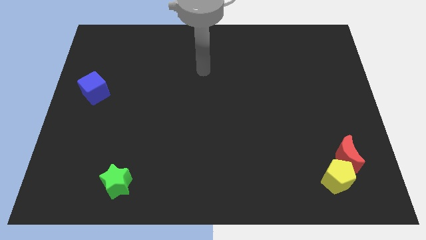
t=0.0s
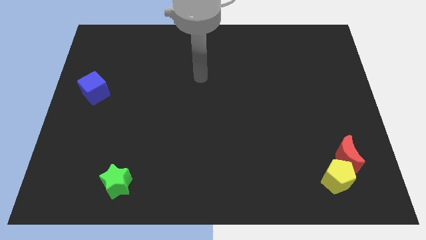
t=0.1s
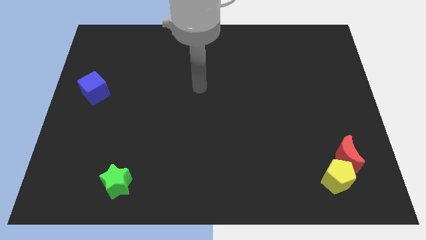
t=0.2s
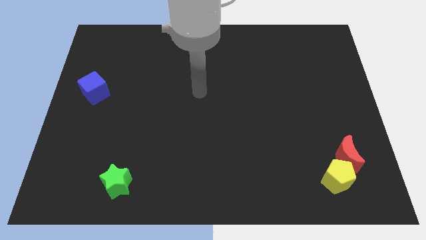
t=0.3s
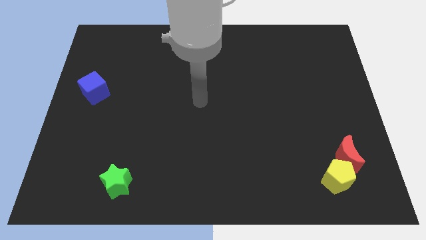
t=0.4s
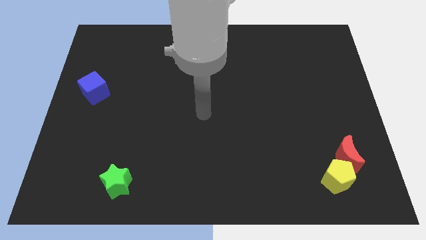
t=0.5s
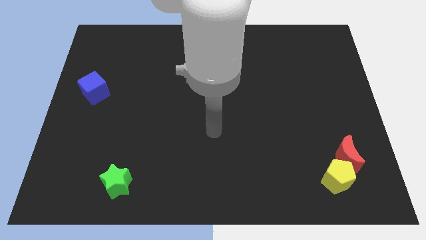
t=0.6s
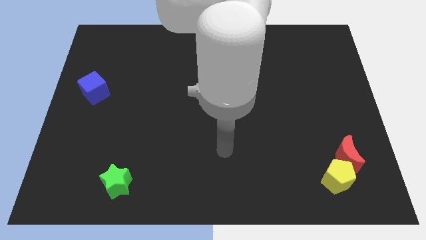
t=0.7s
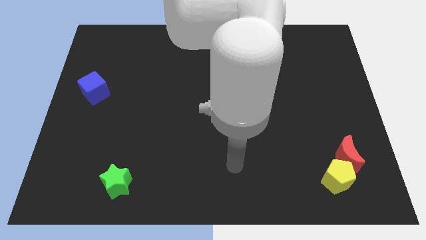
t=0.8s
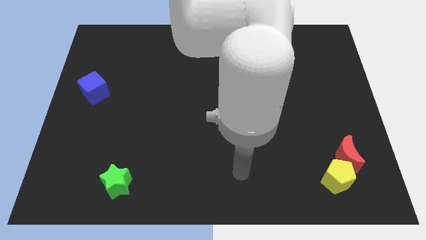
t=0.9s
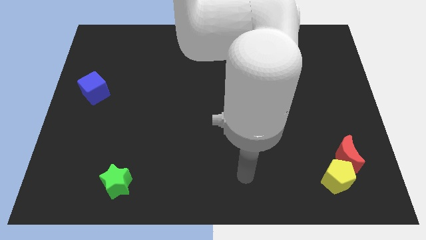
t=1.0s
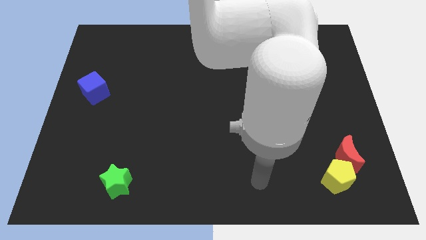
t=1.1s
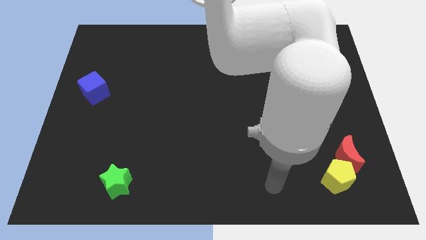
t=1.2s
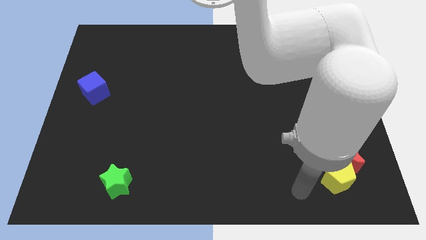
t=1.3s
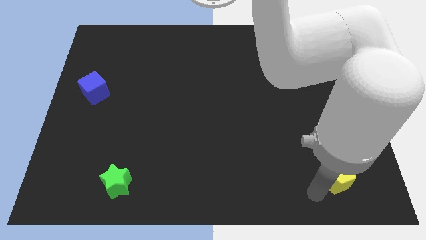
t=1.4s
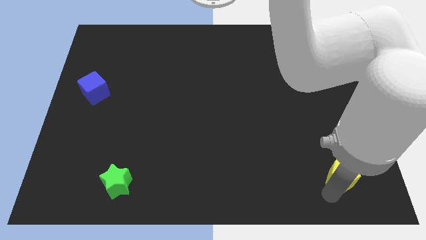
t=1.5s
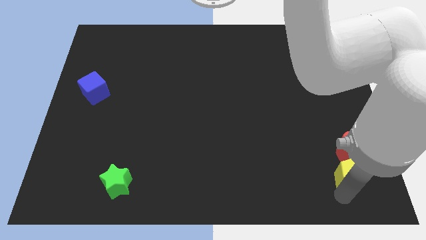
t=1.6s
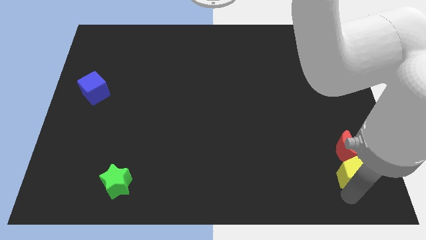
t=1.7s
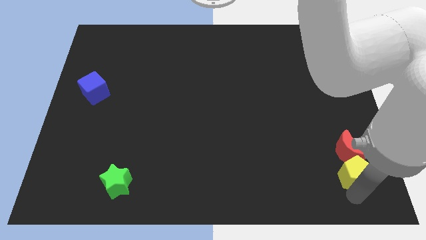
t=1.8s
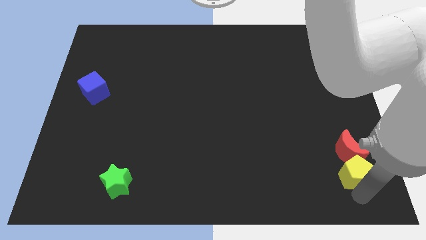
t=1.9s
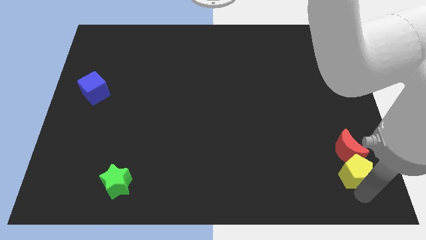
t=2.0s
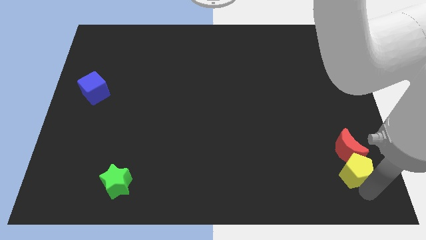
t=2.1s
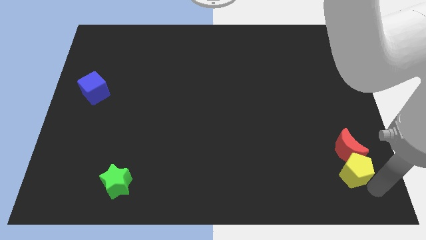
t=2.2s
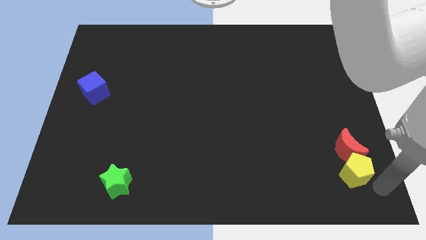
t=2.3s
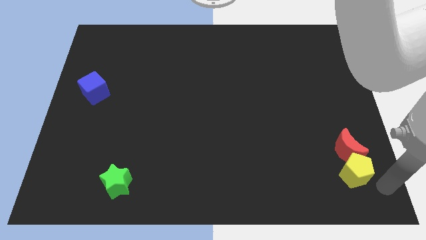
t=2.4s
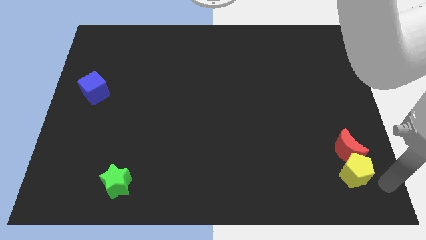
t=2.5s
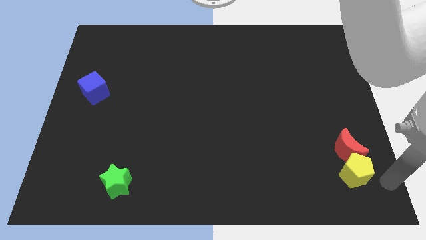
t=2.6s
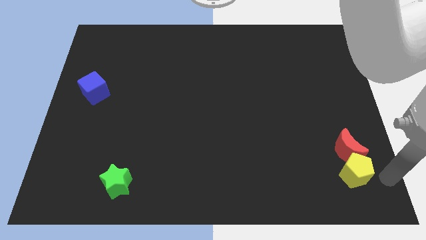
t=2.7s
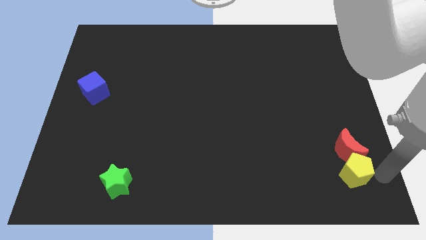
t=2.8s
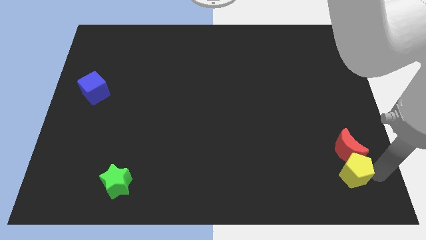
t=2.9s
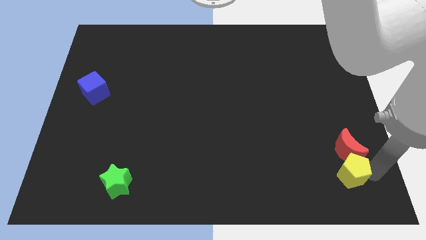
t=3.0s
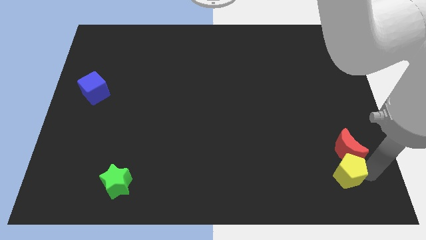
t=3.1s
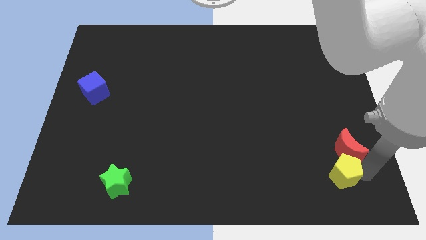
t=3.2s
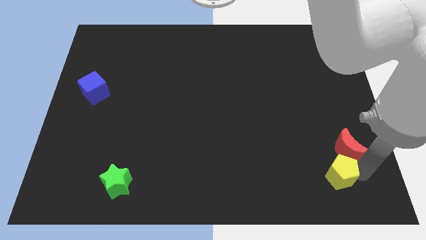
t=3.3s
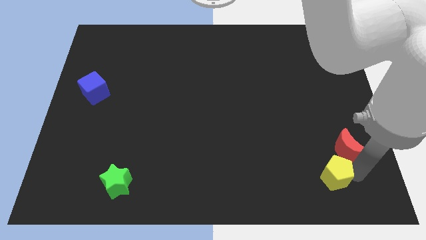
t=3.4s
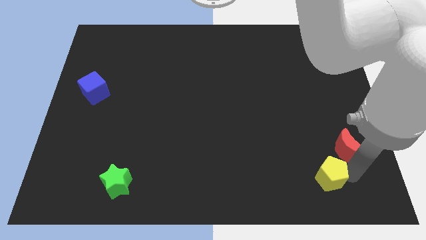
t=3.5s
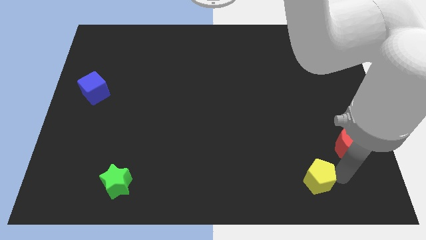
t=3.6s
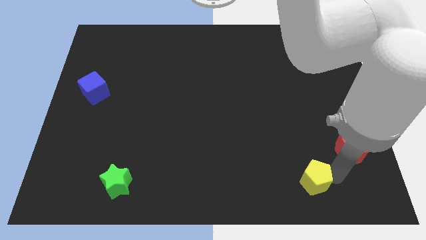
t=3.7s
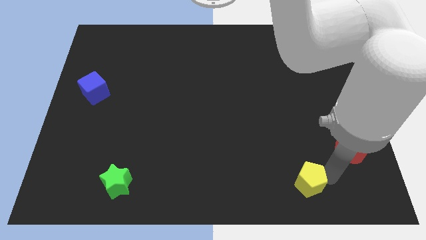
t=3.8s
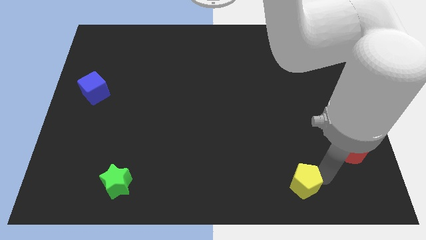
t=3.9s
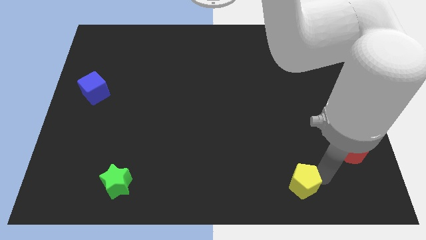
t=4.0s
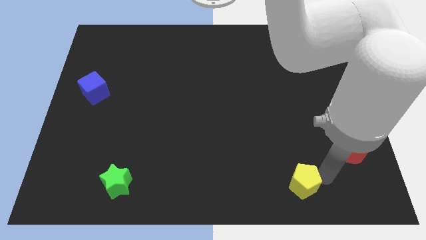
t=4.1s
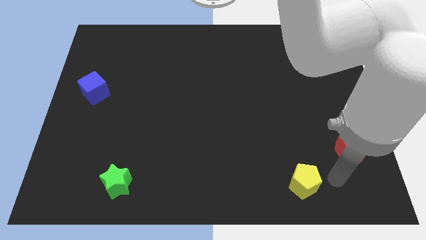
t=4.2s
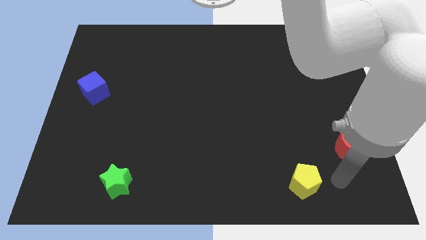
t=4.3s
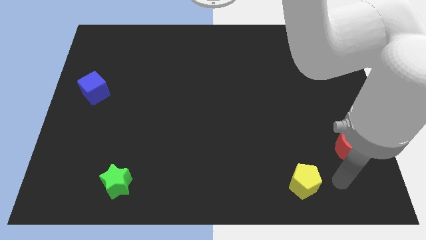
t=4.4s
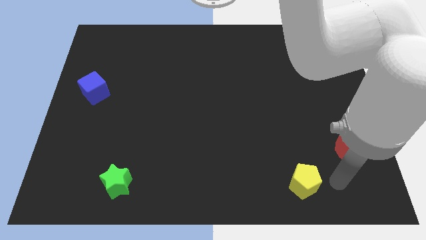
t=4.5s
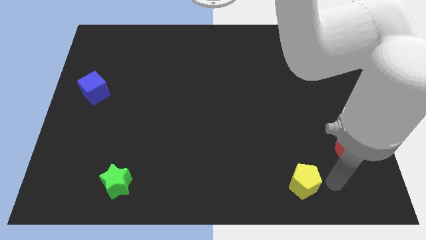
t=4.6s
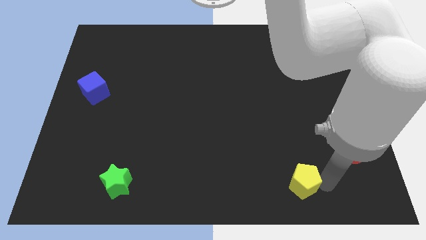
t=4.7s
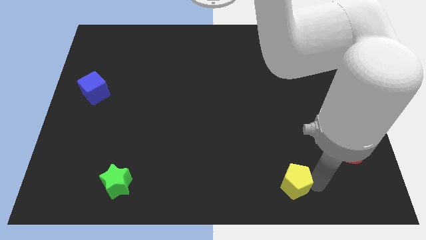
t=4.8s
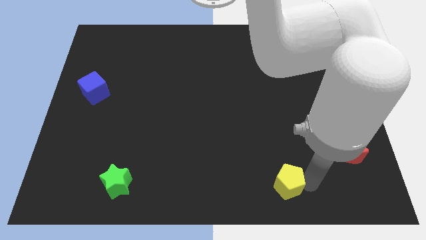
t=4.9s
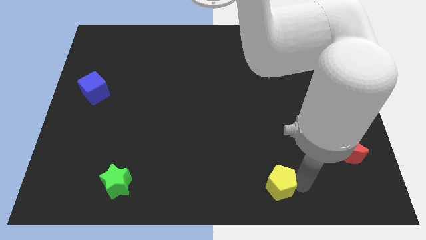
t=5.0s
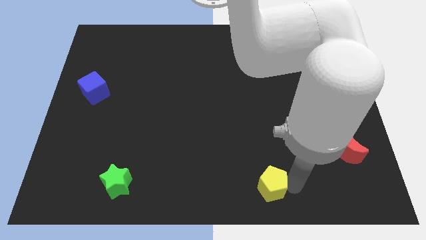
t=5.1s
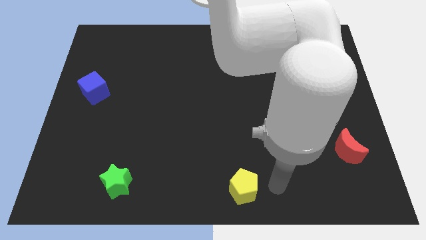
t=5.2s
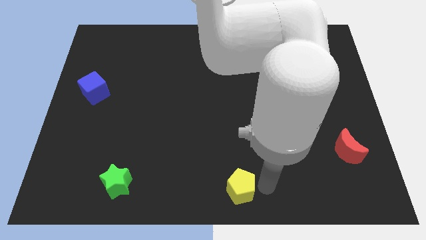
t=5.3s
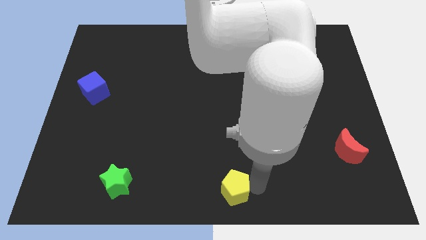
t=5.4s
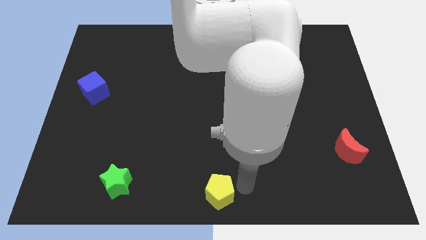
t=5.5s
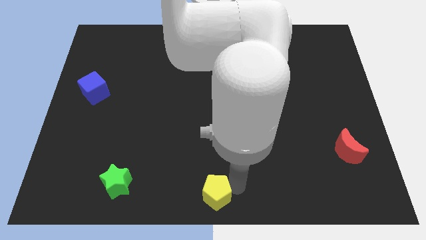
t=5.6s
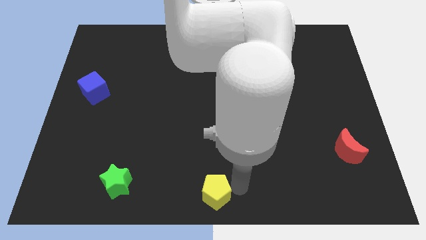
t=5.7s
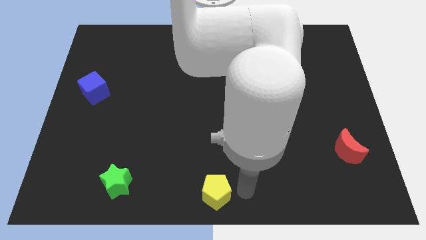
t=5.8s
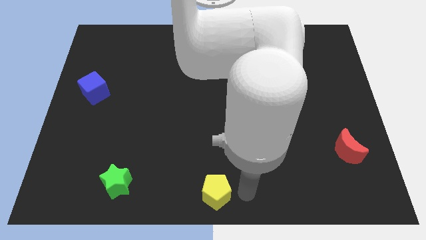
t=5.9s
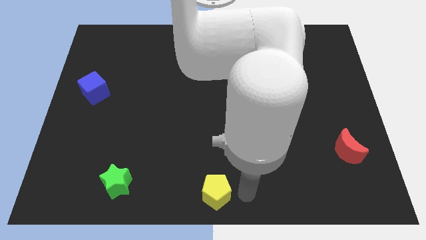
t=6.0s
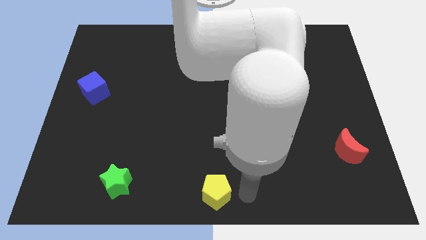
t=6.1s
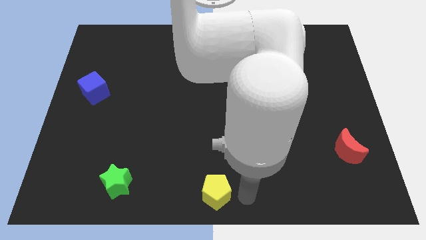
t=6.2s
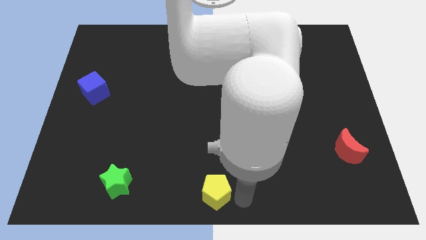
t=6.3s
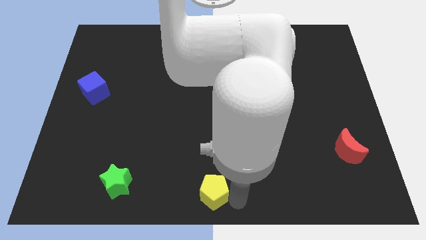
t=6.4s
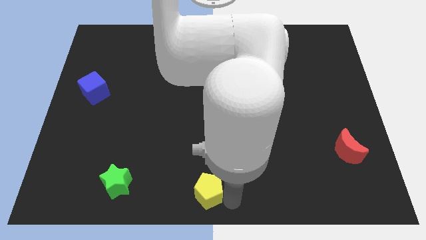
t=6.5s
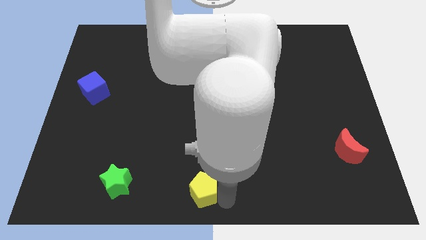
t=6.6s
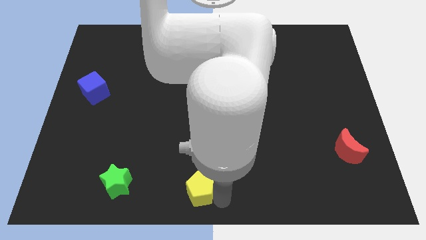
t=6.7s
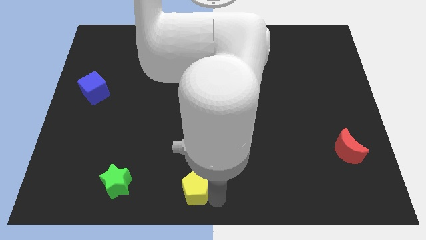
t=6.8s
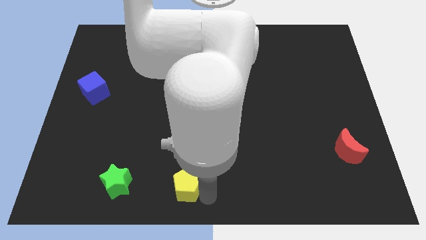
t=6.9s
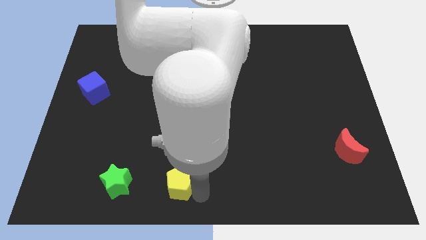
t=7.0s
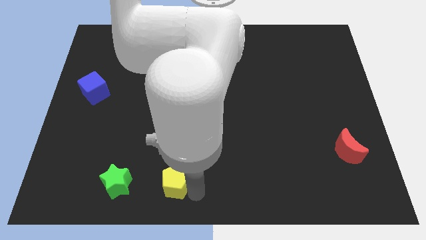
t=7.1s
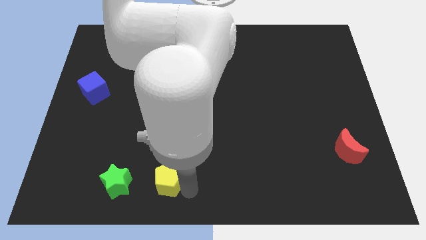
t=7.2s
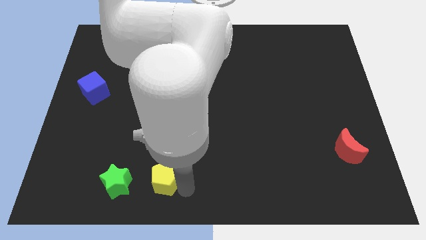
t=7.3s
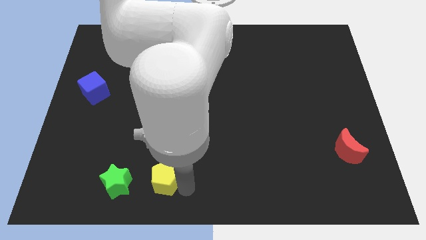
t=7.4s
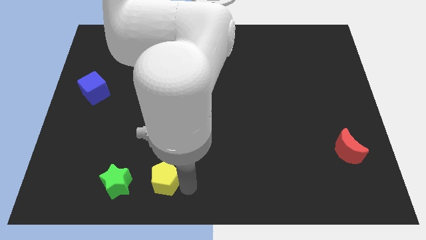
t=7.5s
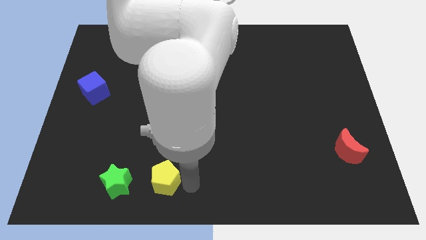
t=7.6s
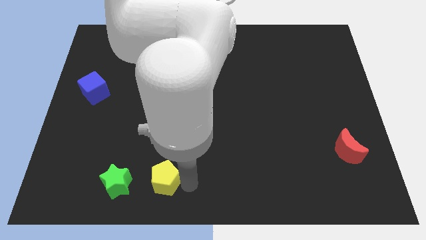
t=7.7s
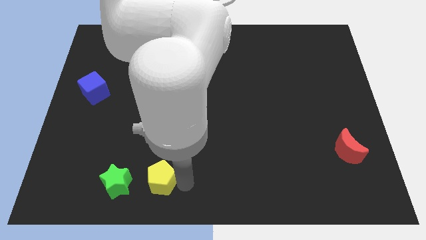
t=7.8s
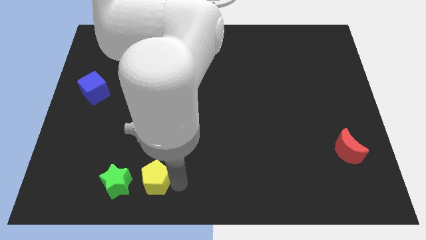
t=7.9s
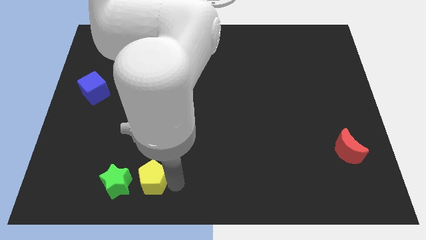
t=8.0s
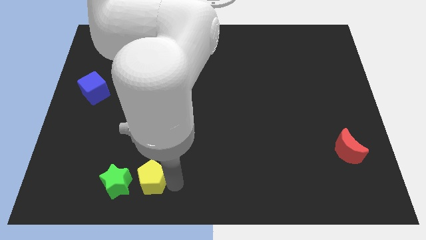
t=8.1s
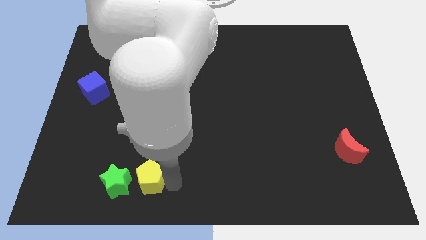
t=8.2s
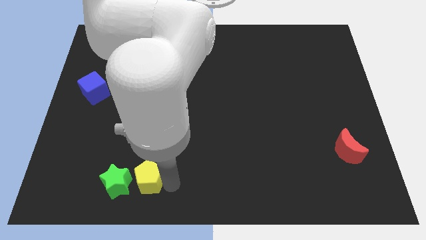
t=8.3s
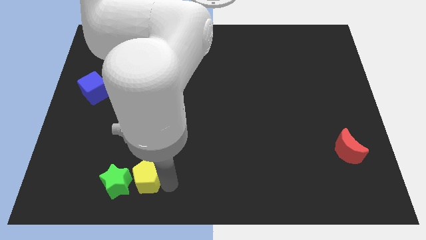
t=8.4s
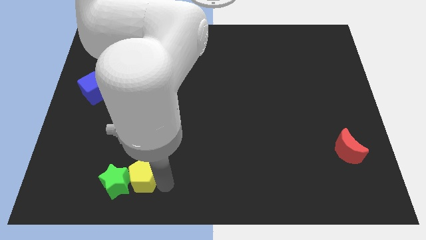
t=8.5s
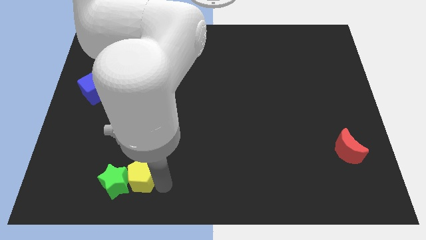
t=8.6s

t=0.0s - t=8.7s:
put the yellow pentagon towards the green star
